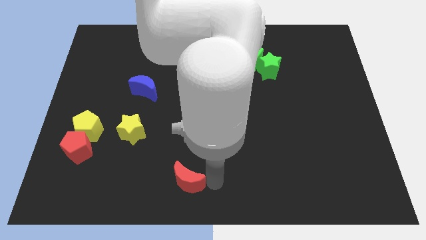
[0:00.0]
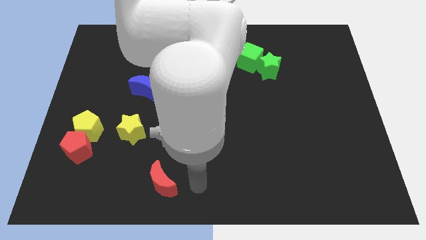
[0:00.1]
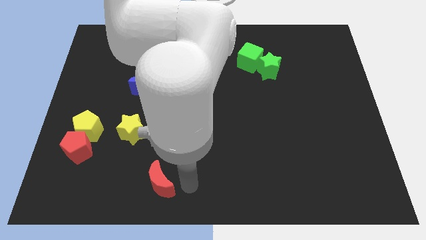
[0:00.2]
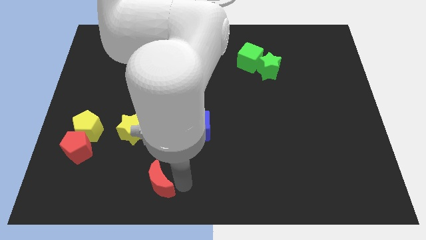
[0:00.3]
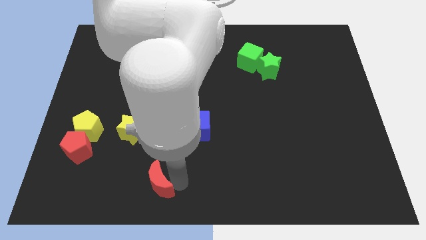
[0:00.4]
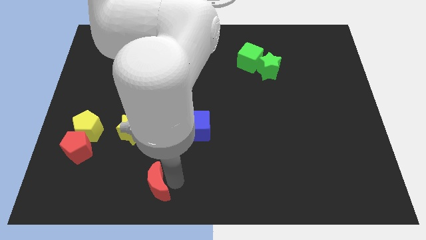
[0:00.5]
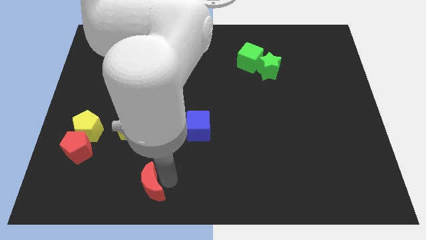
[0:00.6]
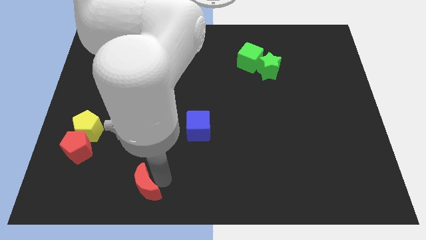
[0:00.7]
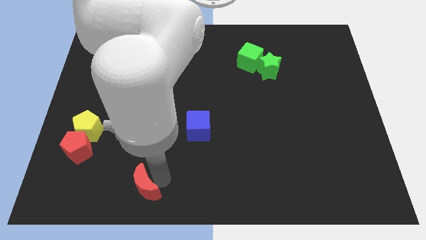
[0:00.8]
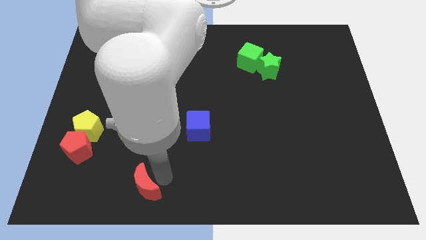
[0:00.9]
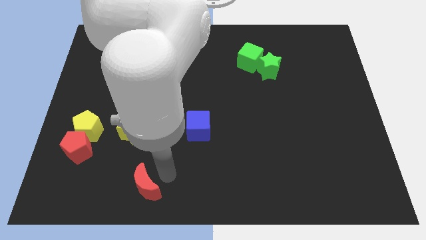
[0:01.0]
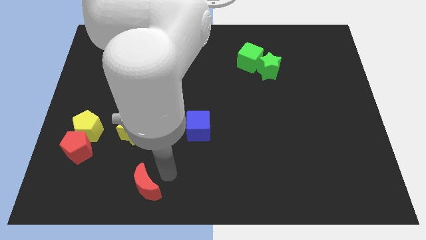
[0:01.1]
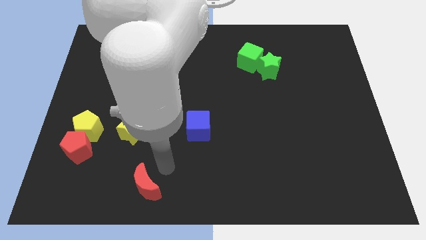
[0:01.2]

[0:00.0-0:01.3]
push the red crescent slightly to the bottom of the yellow star vertically

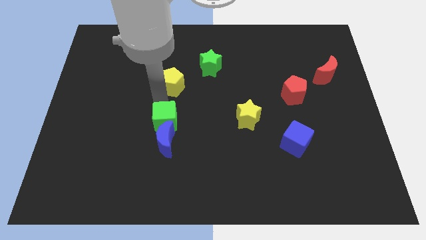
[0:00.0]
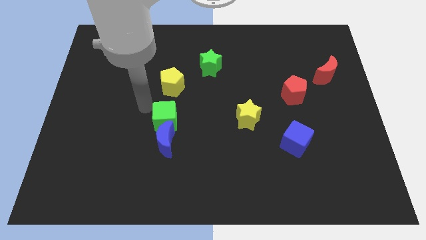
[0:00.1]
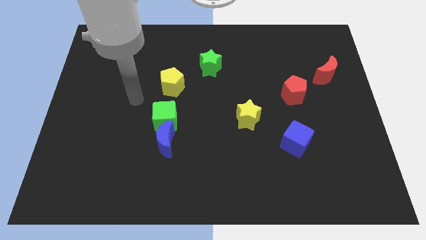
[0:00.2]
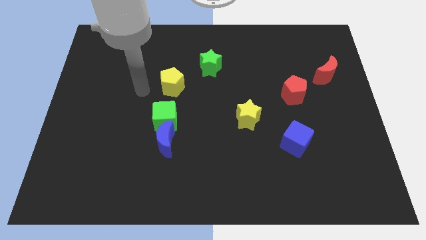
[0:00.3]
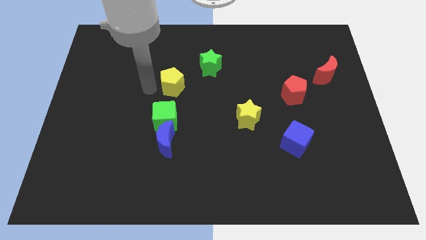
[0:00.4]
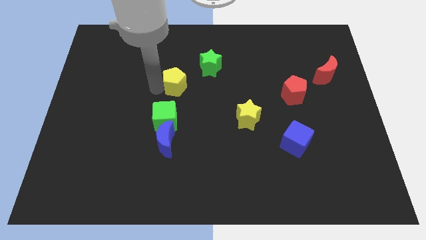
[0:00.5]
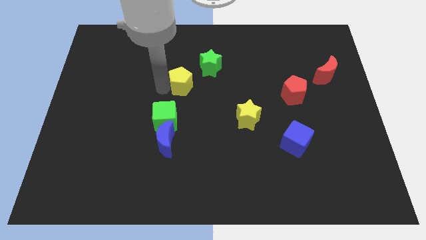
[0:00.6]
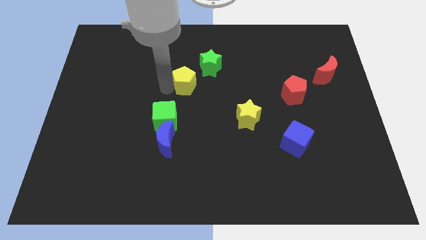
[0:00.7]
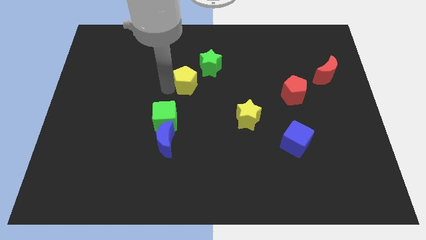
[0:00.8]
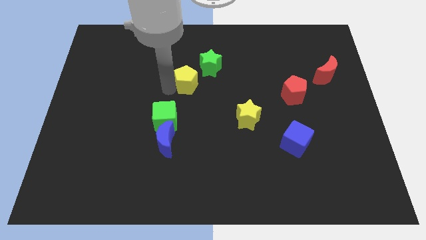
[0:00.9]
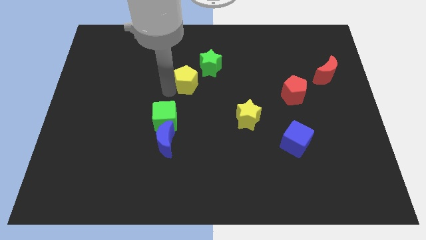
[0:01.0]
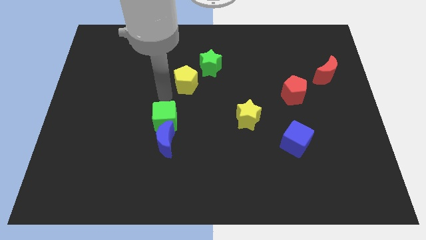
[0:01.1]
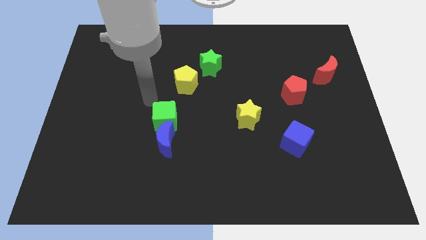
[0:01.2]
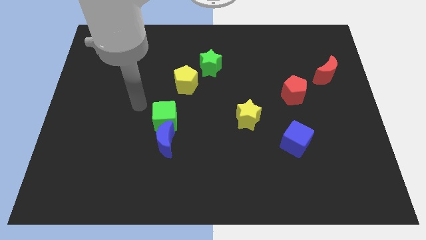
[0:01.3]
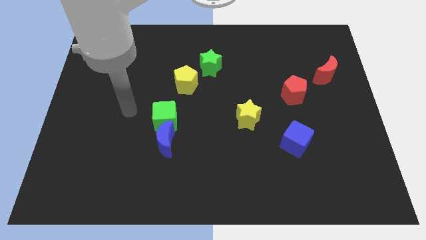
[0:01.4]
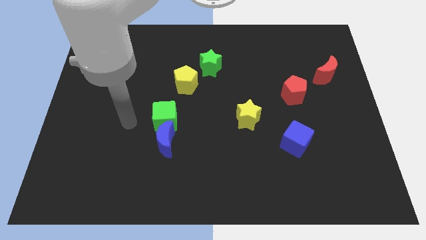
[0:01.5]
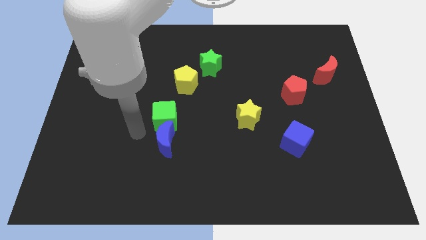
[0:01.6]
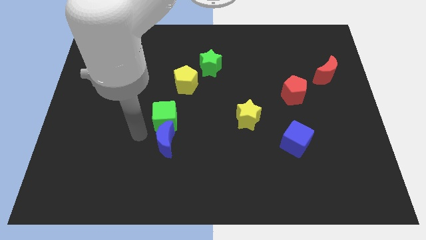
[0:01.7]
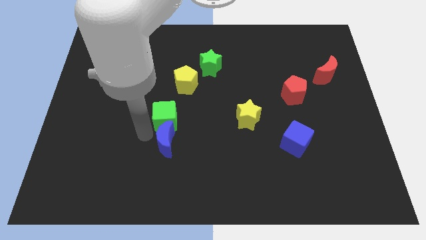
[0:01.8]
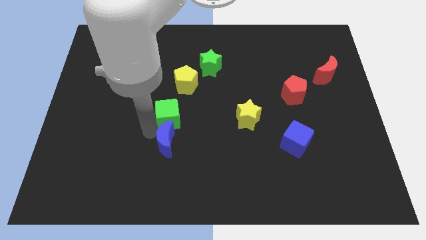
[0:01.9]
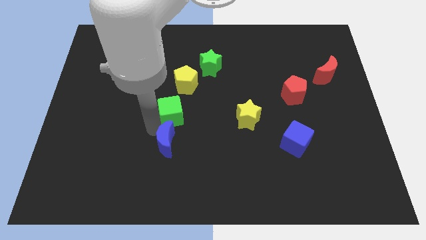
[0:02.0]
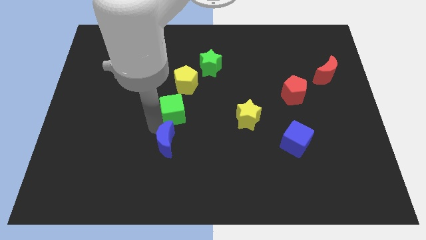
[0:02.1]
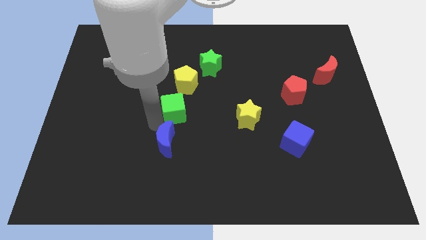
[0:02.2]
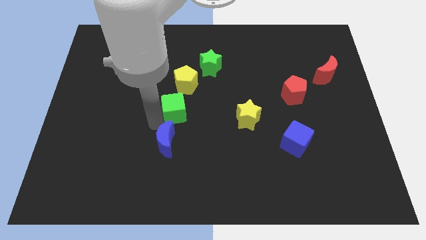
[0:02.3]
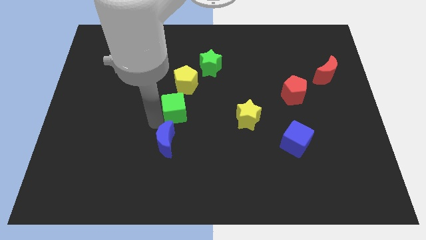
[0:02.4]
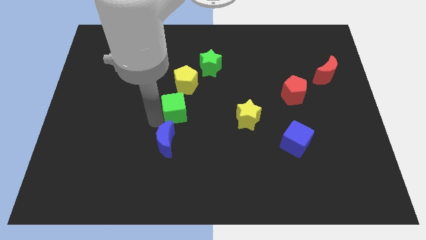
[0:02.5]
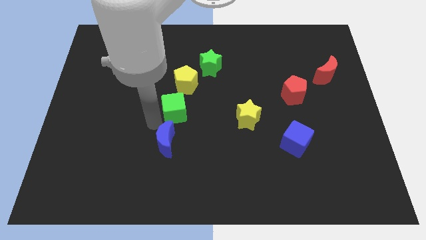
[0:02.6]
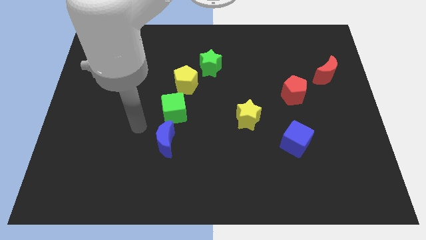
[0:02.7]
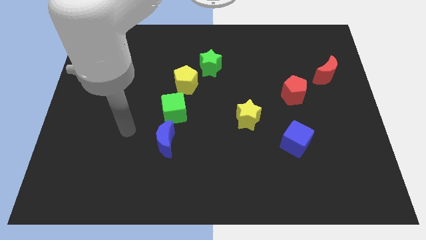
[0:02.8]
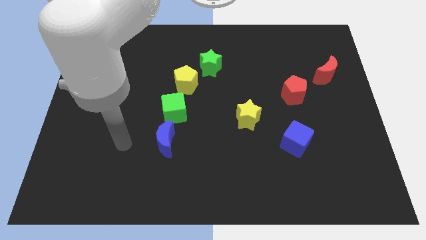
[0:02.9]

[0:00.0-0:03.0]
place green cube below the yellow pentagon

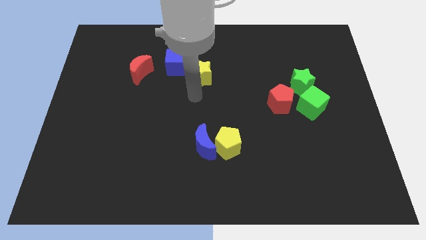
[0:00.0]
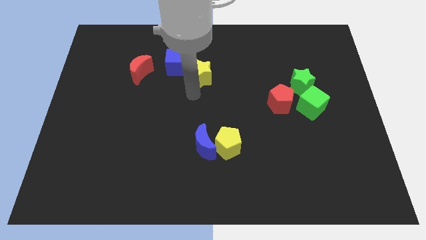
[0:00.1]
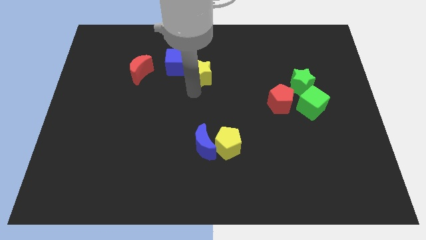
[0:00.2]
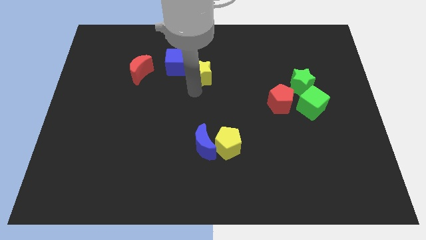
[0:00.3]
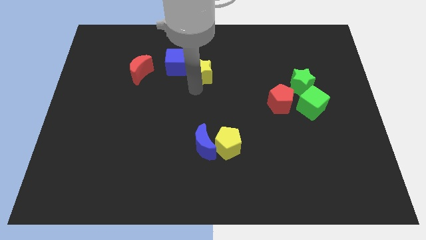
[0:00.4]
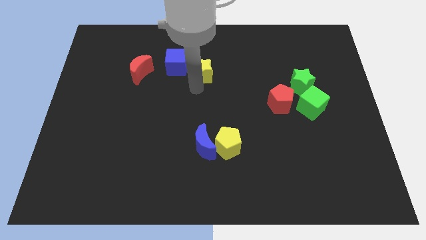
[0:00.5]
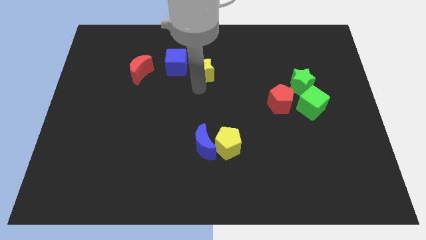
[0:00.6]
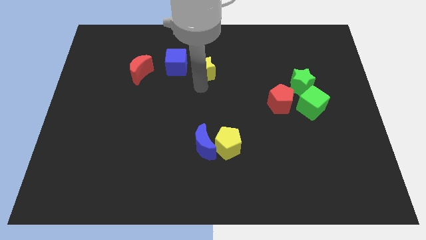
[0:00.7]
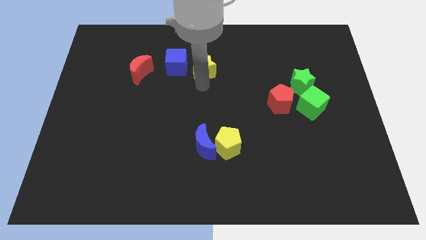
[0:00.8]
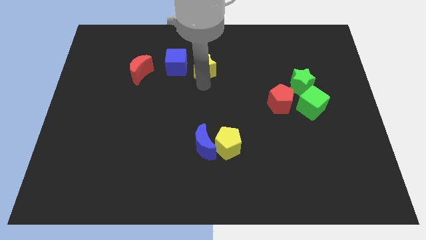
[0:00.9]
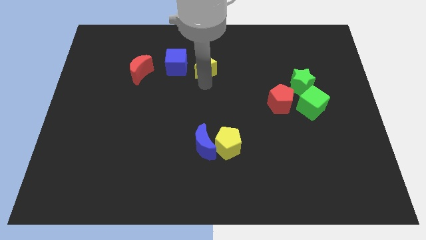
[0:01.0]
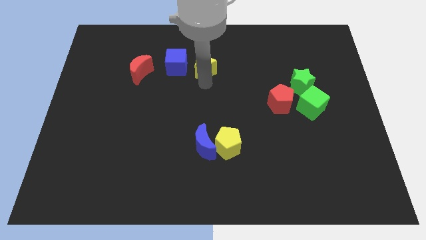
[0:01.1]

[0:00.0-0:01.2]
move the yellow star right beside the blue cube

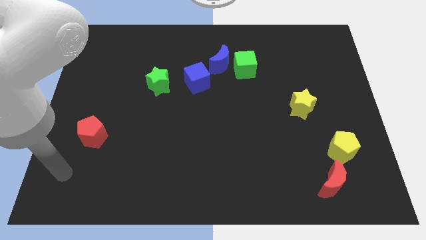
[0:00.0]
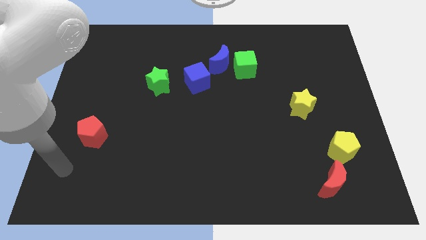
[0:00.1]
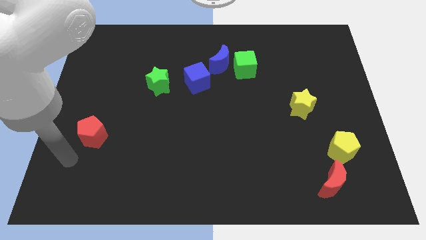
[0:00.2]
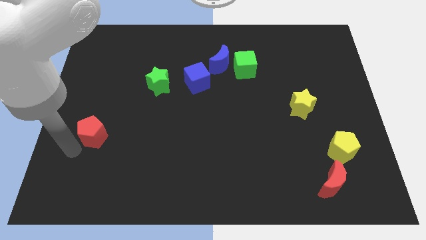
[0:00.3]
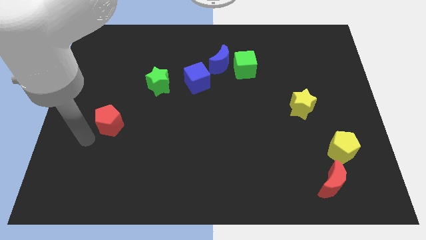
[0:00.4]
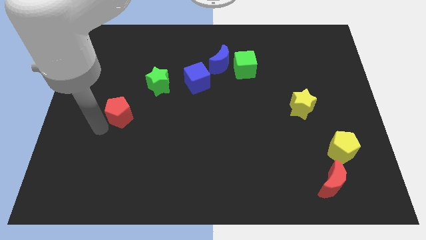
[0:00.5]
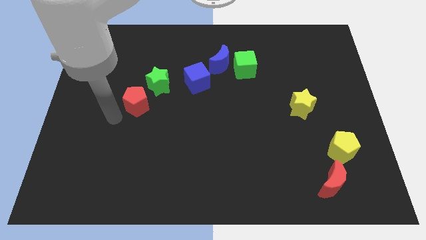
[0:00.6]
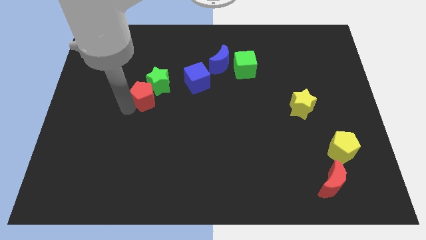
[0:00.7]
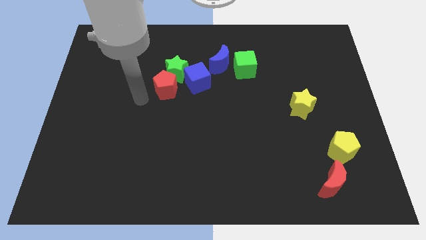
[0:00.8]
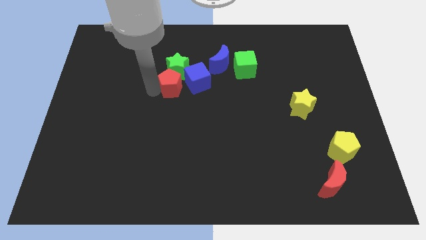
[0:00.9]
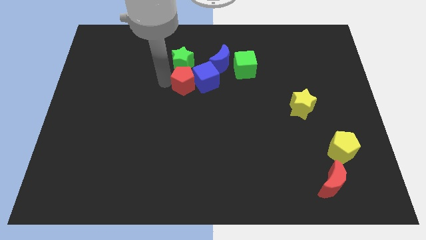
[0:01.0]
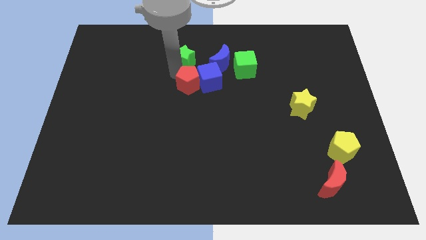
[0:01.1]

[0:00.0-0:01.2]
push the red pentagon into the green star and the blue cube

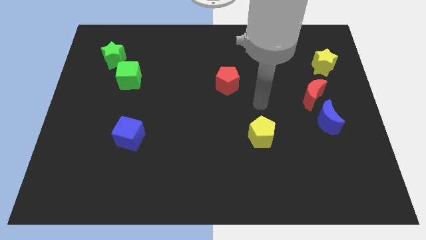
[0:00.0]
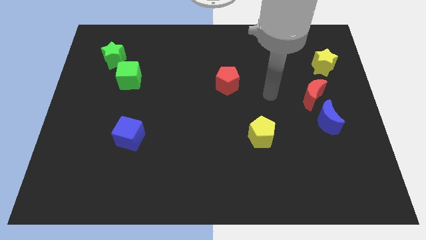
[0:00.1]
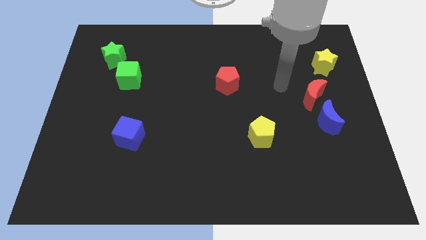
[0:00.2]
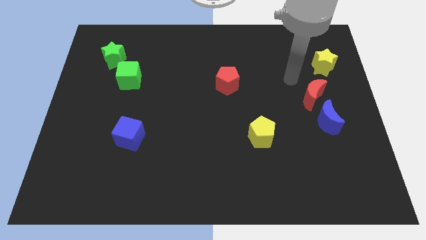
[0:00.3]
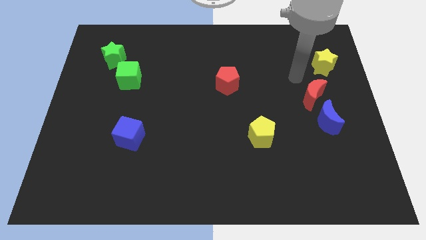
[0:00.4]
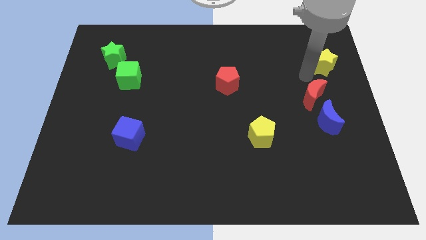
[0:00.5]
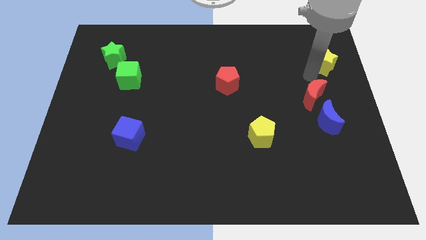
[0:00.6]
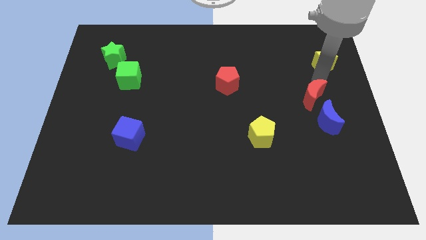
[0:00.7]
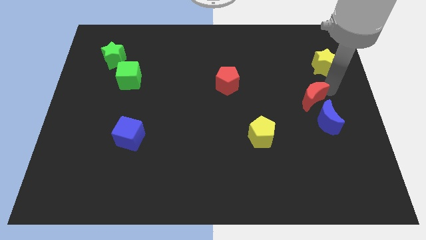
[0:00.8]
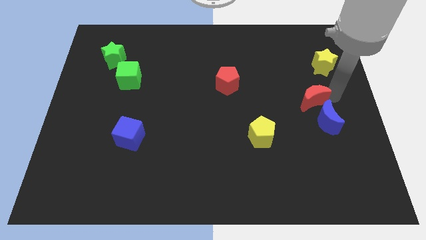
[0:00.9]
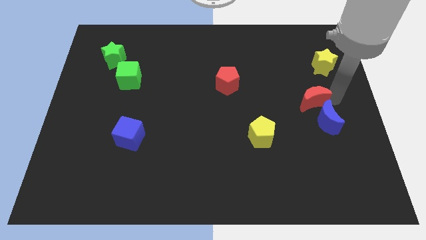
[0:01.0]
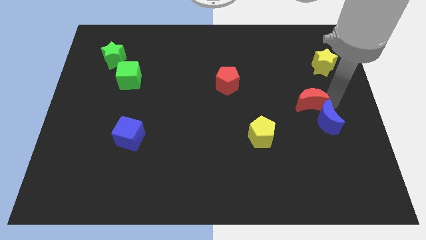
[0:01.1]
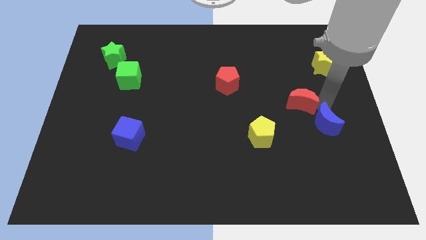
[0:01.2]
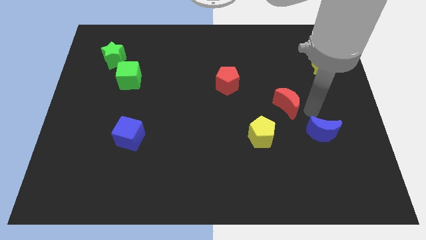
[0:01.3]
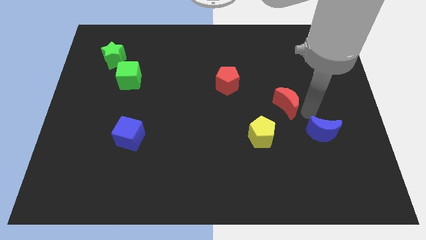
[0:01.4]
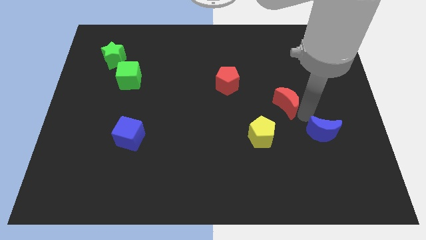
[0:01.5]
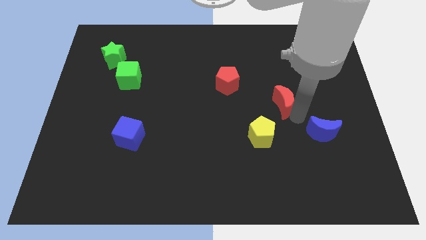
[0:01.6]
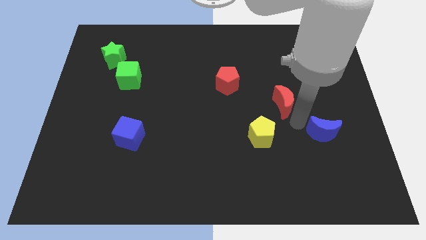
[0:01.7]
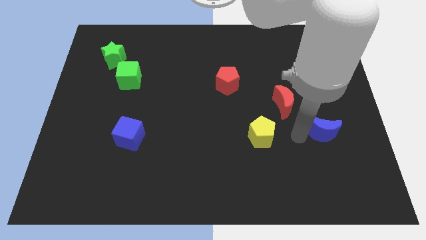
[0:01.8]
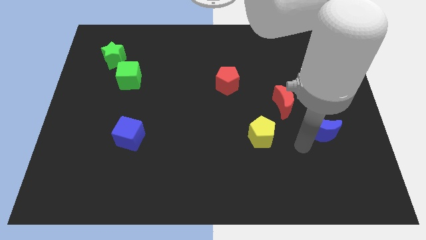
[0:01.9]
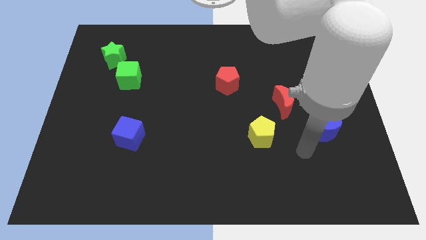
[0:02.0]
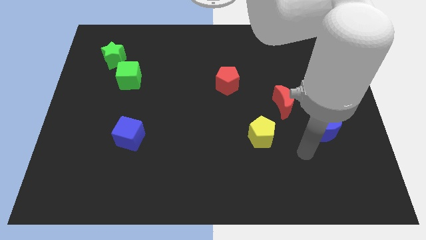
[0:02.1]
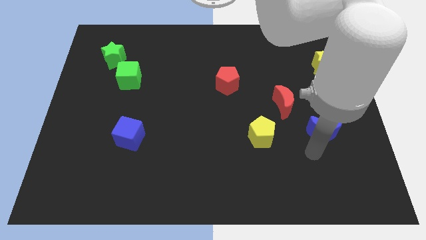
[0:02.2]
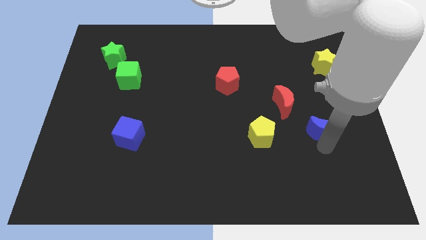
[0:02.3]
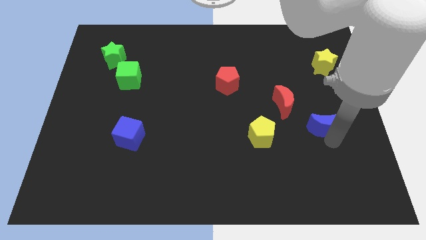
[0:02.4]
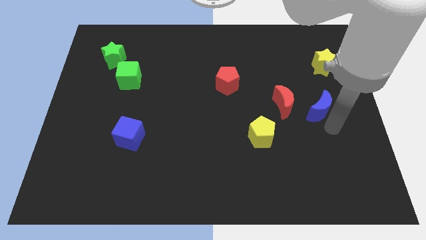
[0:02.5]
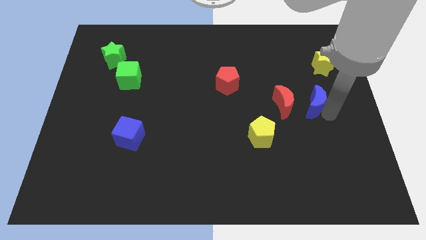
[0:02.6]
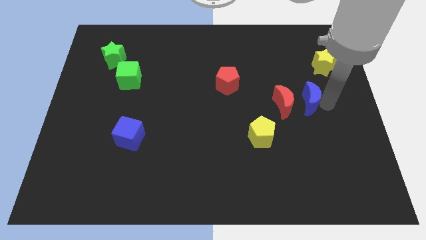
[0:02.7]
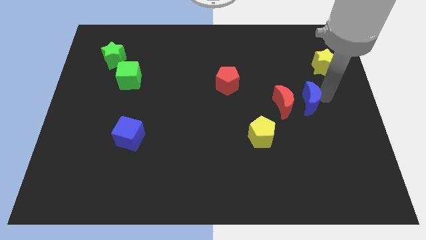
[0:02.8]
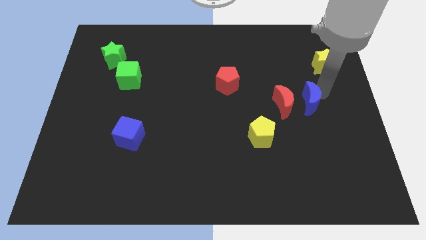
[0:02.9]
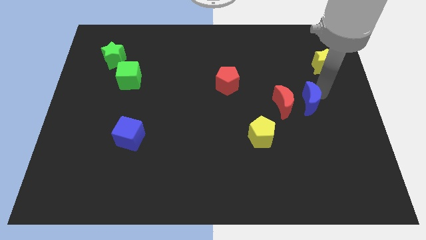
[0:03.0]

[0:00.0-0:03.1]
move the blue moon parallel right to the red moon
